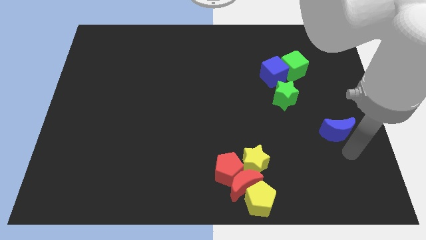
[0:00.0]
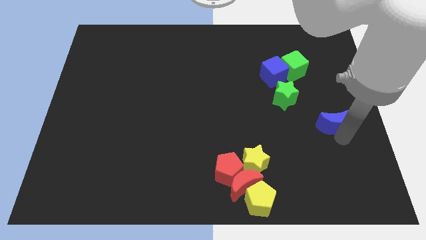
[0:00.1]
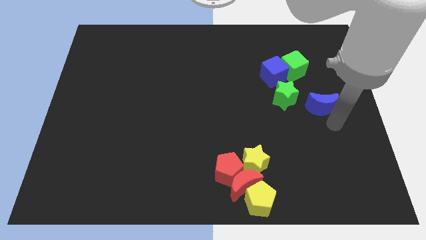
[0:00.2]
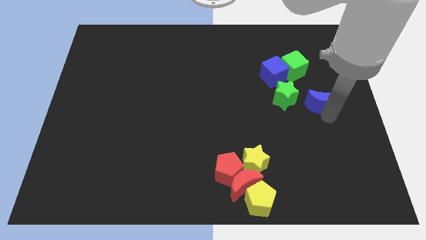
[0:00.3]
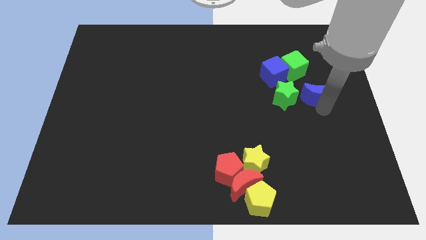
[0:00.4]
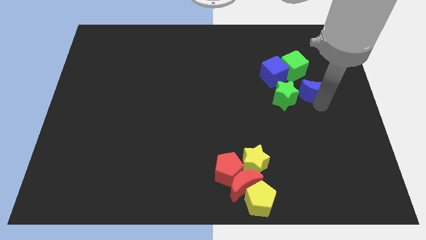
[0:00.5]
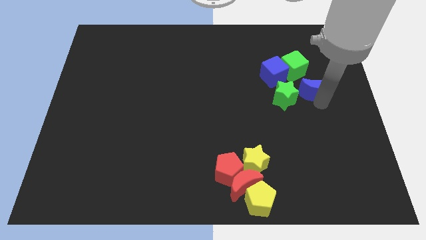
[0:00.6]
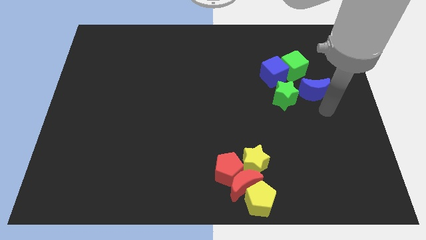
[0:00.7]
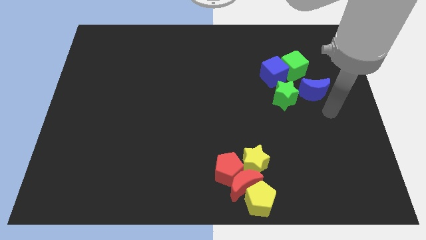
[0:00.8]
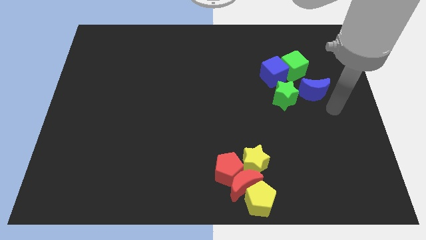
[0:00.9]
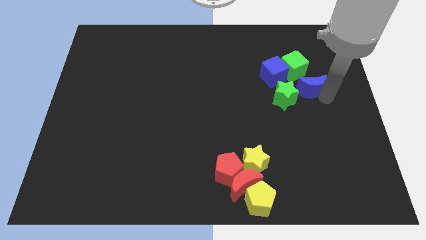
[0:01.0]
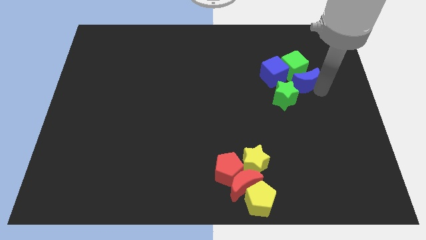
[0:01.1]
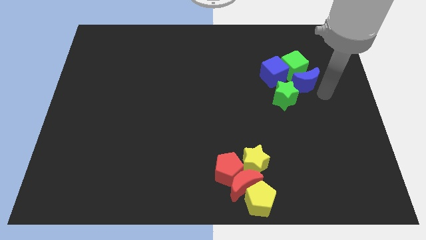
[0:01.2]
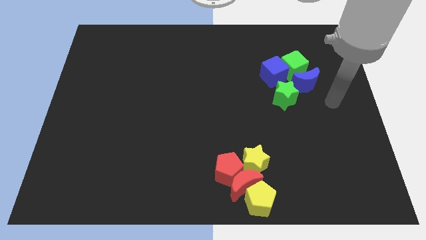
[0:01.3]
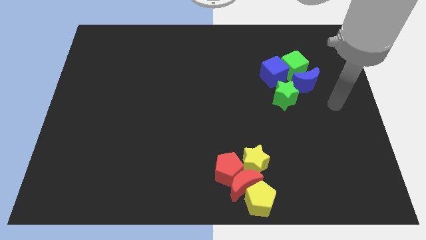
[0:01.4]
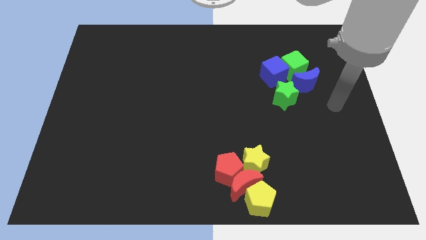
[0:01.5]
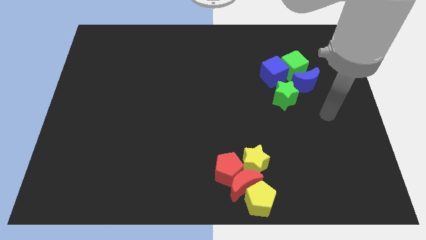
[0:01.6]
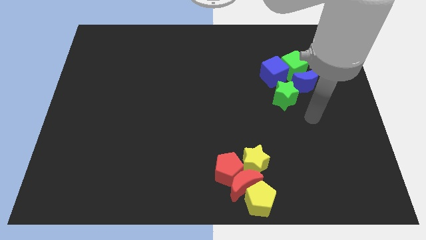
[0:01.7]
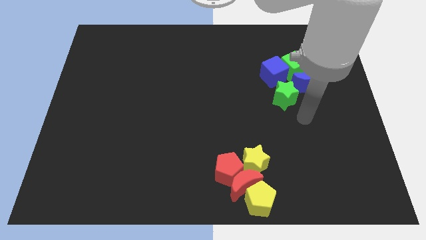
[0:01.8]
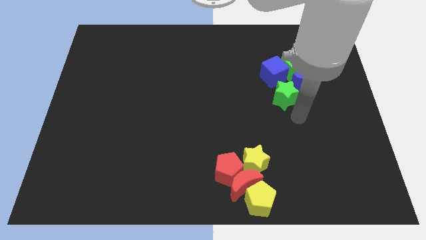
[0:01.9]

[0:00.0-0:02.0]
place the blue crescent to the bottom of the green cube

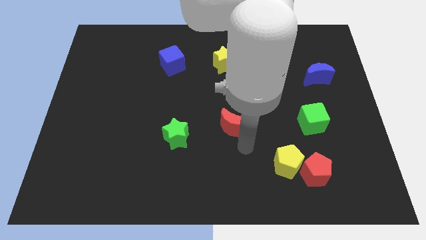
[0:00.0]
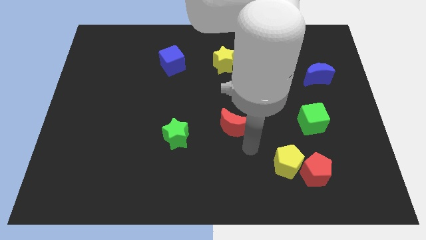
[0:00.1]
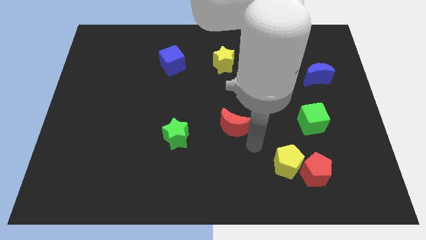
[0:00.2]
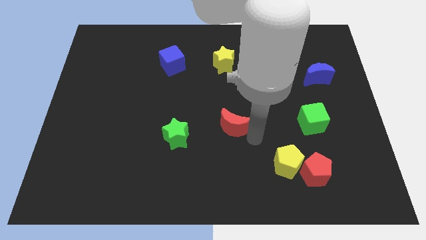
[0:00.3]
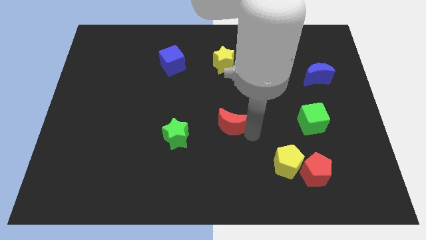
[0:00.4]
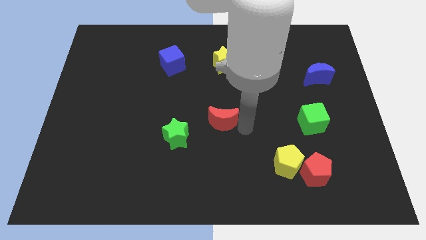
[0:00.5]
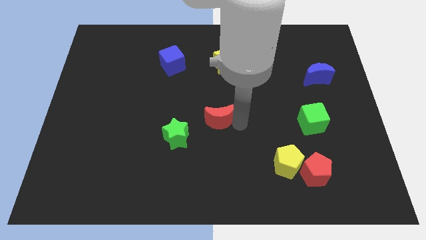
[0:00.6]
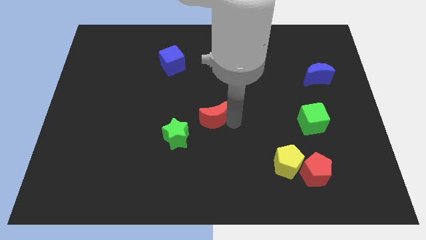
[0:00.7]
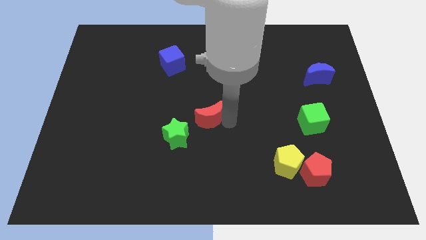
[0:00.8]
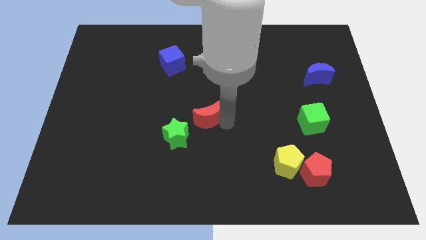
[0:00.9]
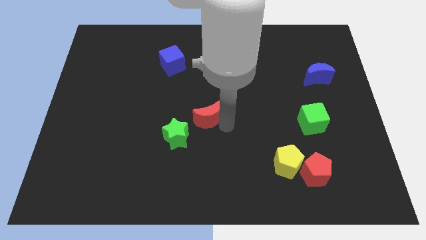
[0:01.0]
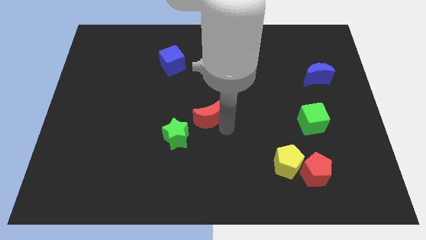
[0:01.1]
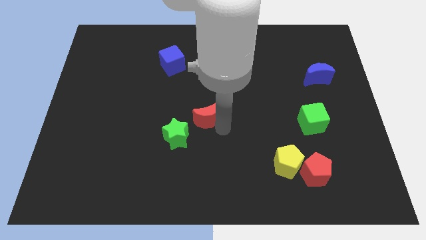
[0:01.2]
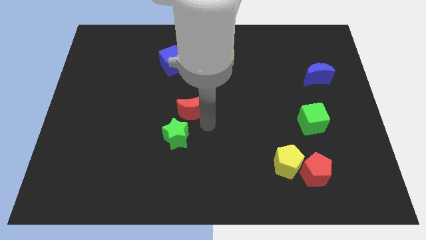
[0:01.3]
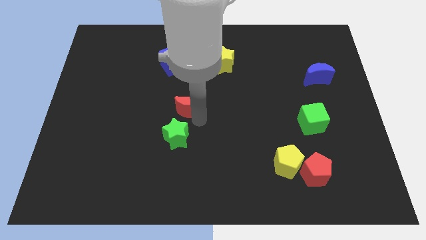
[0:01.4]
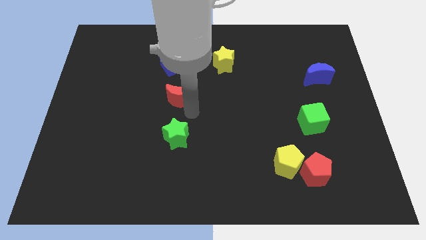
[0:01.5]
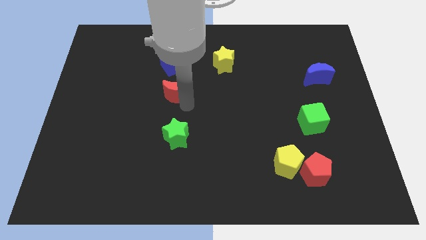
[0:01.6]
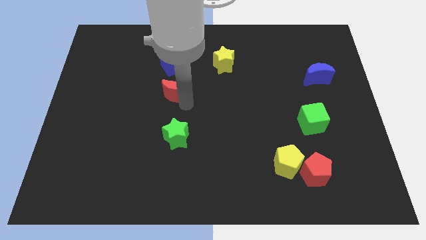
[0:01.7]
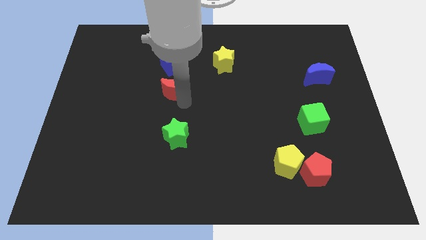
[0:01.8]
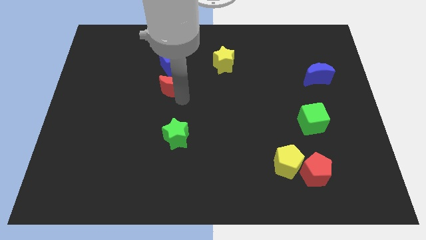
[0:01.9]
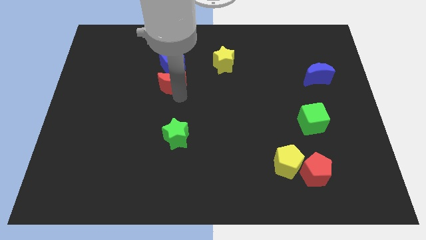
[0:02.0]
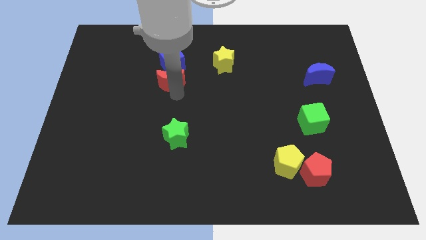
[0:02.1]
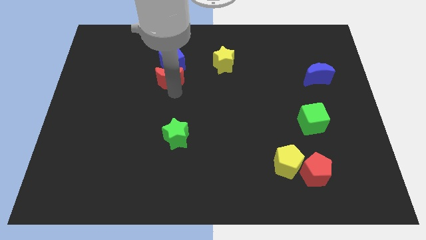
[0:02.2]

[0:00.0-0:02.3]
place the red crescent under the blue cube

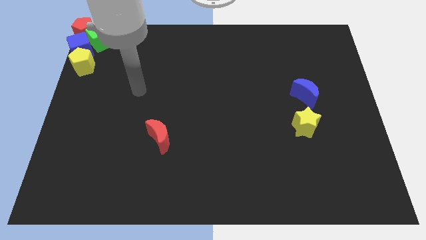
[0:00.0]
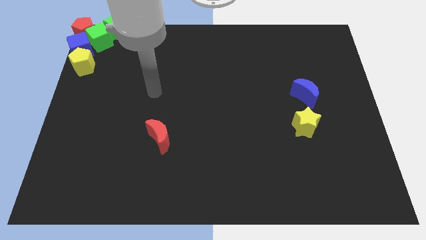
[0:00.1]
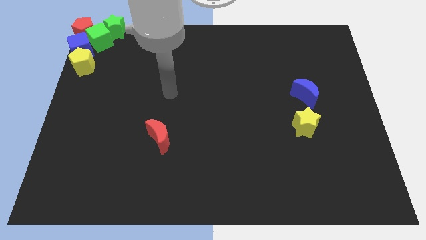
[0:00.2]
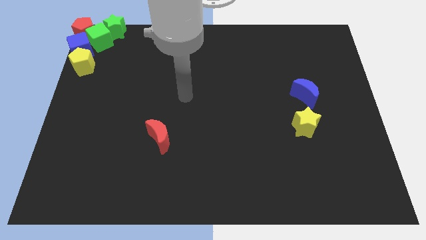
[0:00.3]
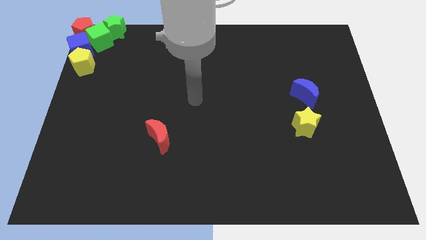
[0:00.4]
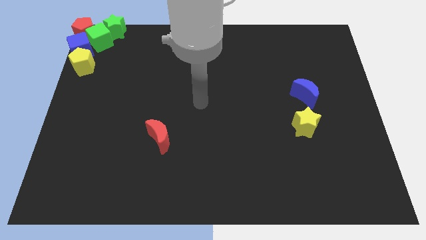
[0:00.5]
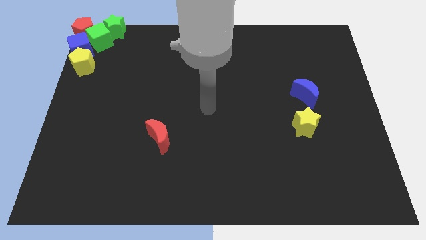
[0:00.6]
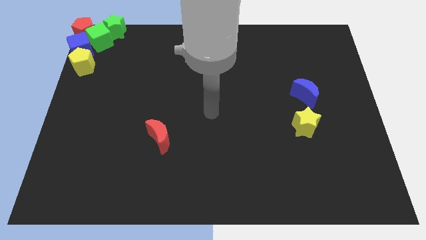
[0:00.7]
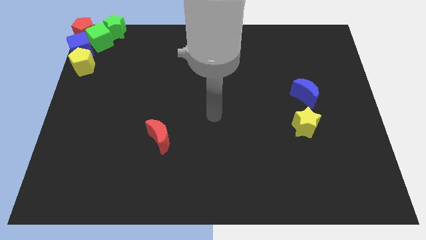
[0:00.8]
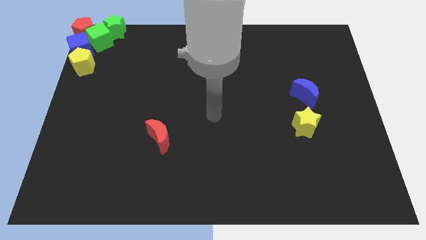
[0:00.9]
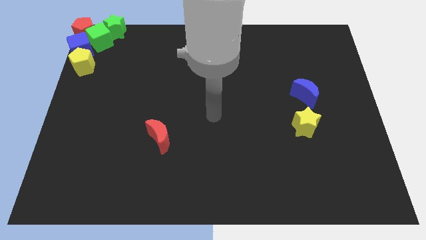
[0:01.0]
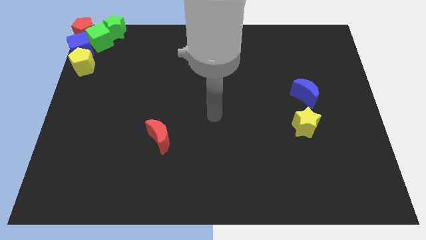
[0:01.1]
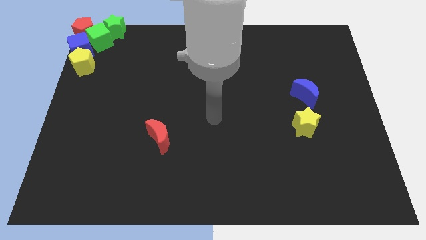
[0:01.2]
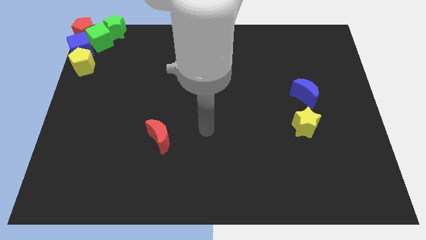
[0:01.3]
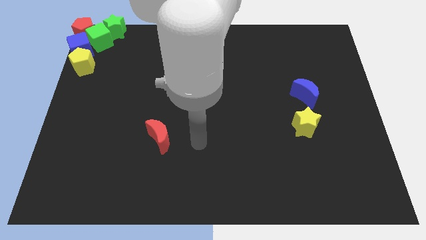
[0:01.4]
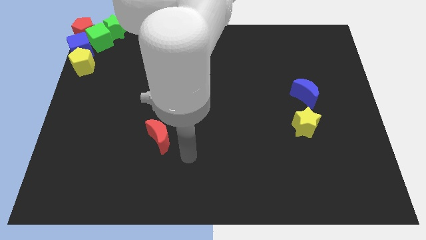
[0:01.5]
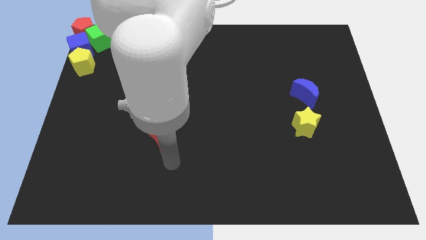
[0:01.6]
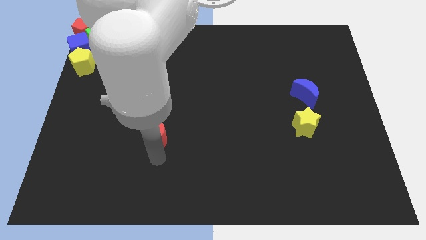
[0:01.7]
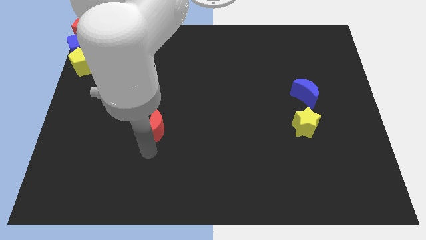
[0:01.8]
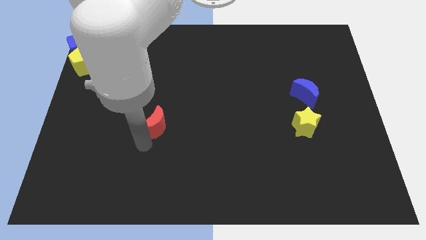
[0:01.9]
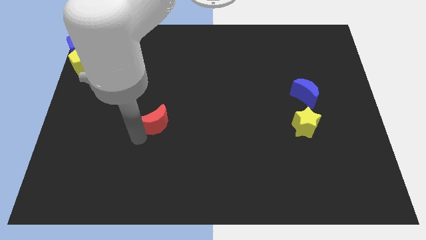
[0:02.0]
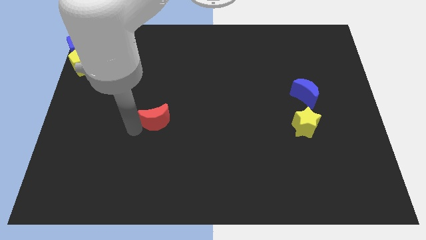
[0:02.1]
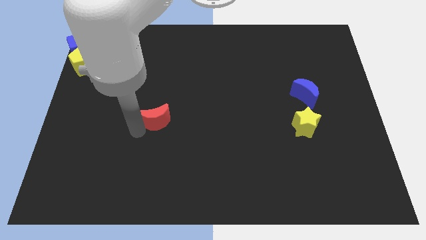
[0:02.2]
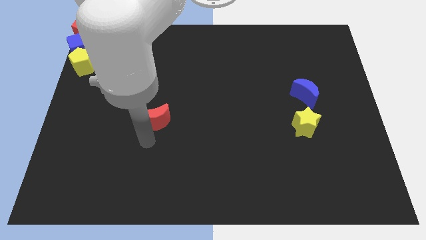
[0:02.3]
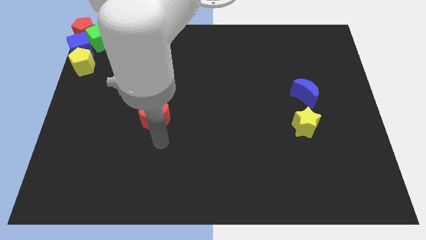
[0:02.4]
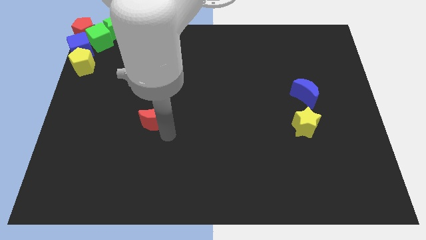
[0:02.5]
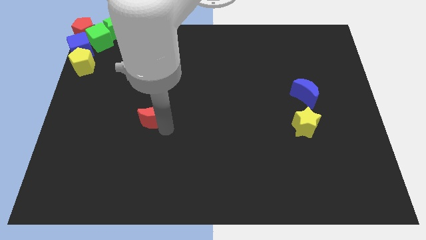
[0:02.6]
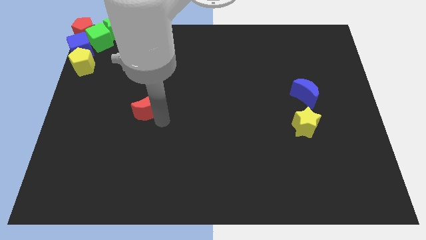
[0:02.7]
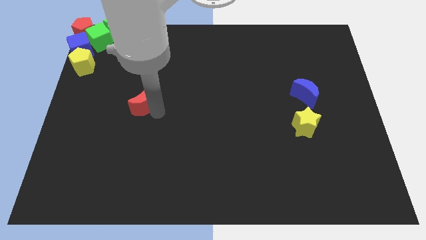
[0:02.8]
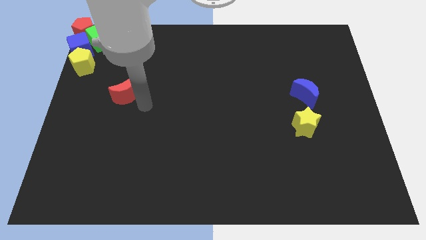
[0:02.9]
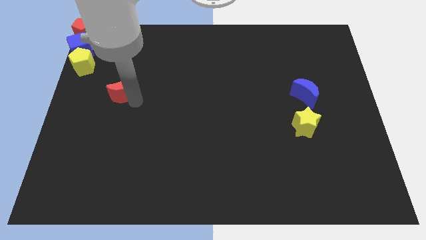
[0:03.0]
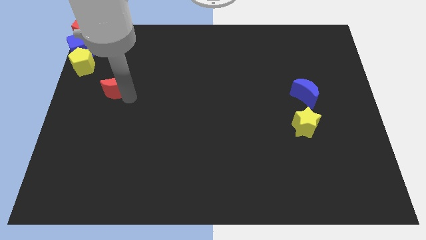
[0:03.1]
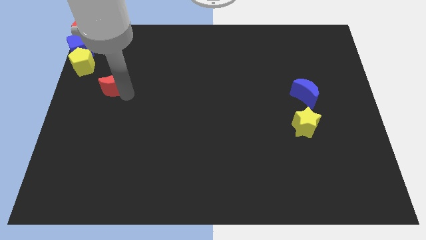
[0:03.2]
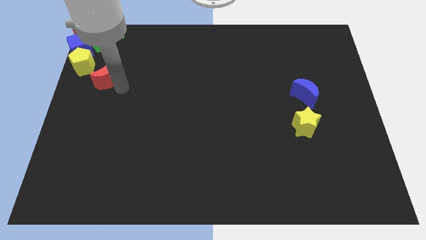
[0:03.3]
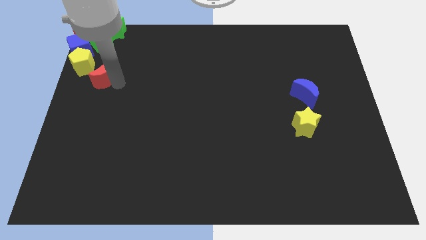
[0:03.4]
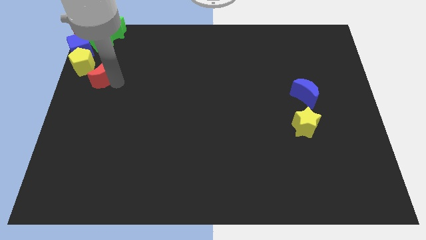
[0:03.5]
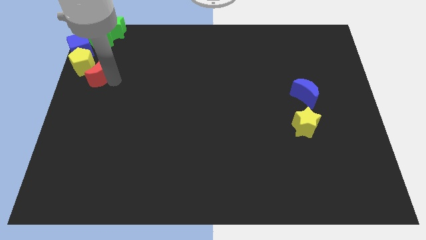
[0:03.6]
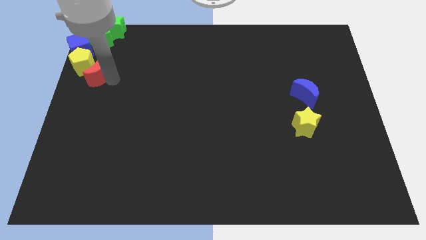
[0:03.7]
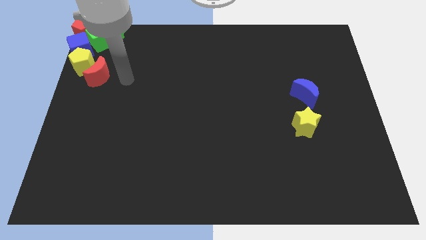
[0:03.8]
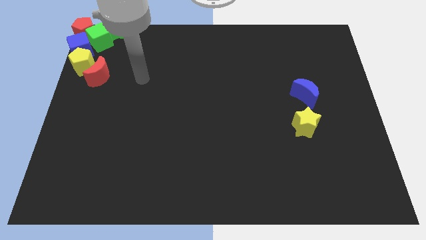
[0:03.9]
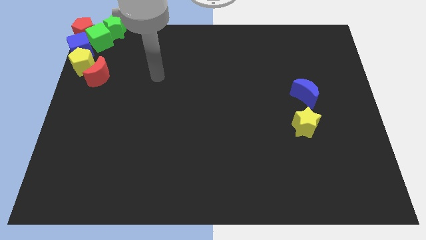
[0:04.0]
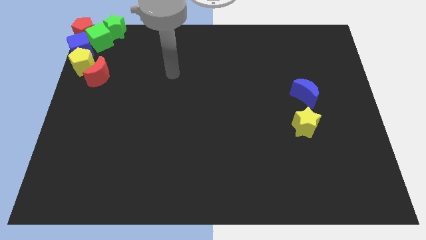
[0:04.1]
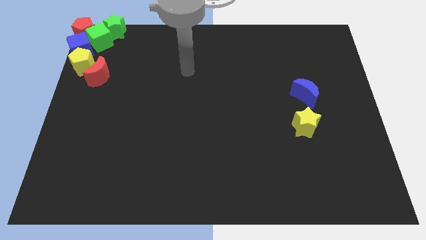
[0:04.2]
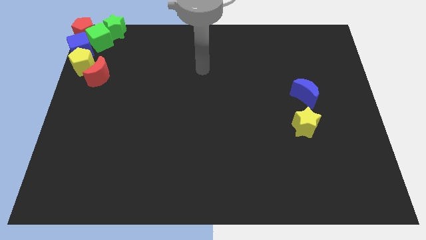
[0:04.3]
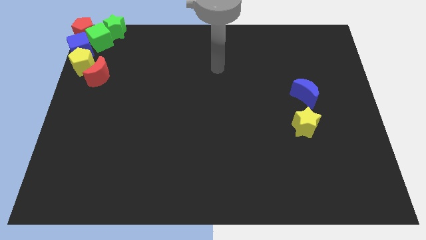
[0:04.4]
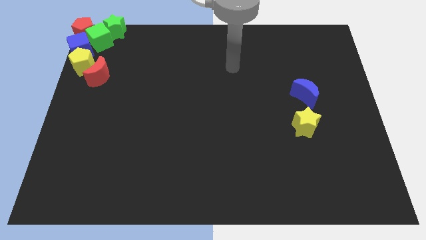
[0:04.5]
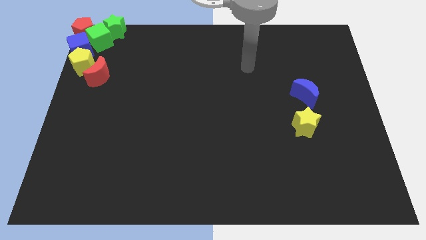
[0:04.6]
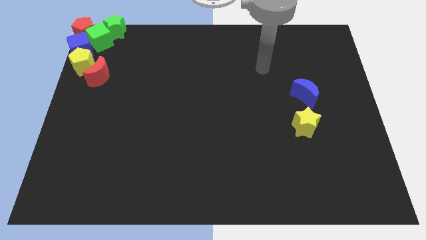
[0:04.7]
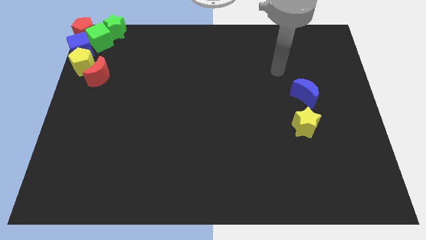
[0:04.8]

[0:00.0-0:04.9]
move the red crescent to the bottom right of yellow pentagon which is at the top left corner
